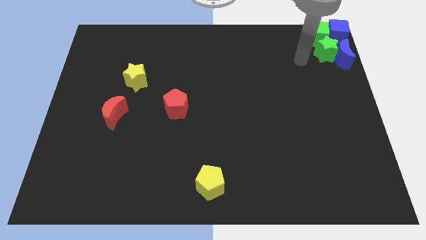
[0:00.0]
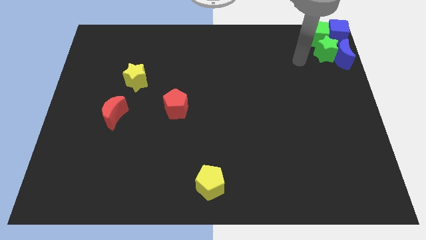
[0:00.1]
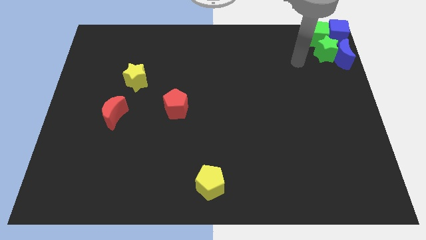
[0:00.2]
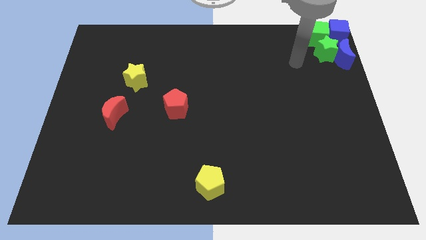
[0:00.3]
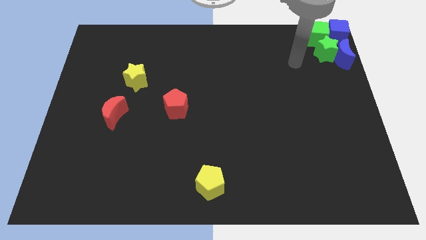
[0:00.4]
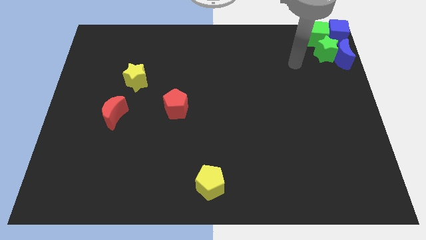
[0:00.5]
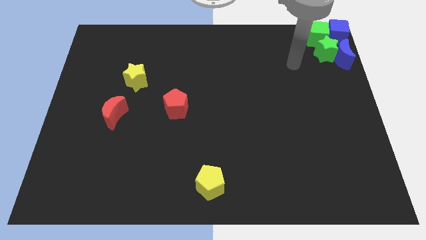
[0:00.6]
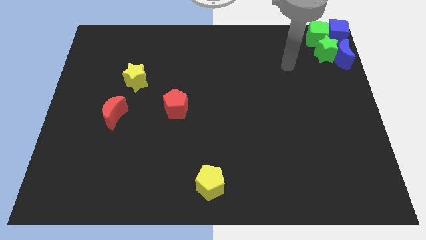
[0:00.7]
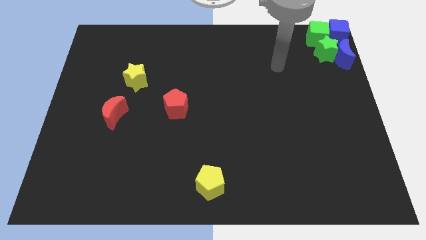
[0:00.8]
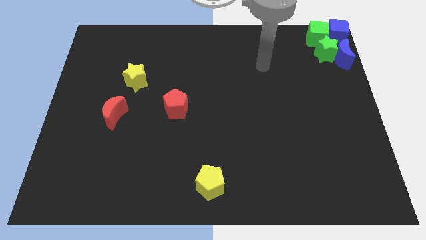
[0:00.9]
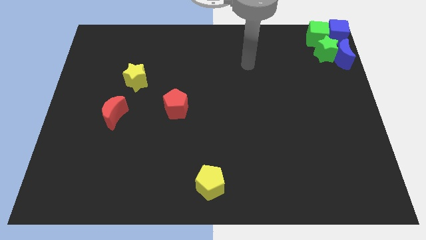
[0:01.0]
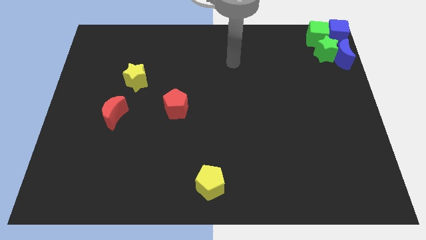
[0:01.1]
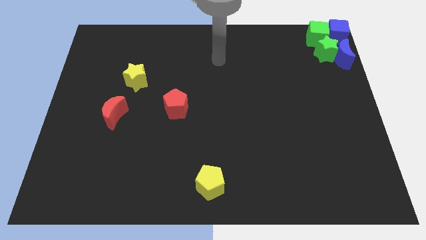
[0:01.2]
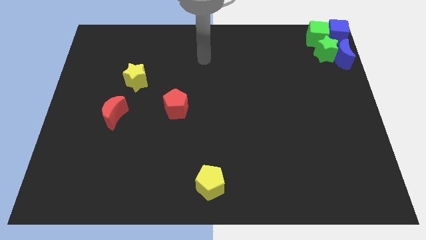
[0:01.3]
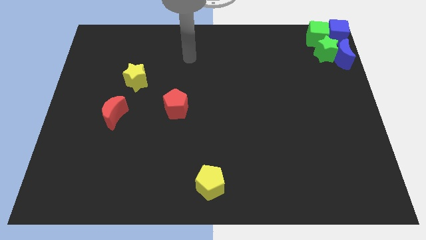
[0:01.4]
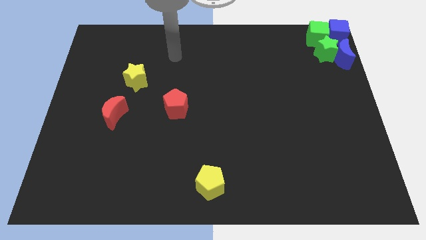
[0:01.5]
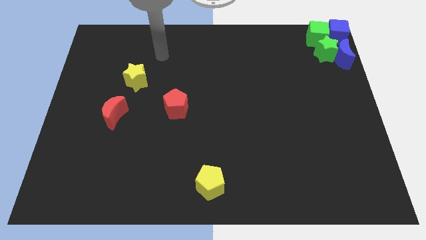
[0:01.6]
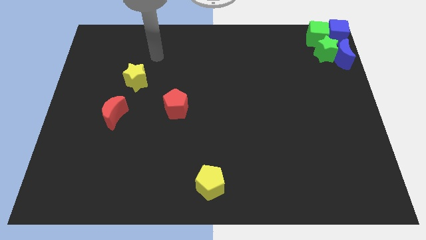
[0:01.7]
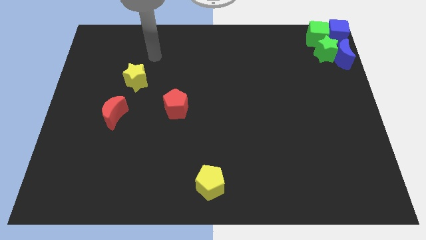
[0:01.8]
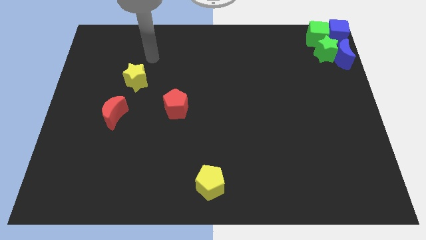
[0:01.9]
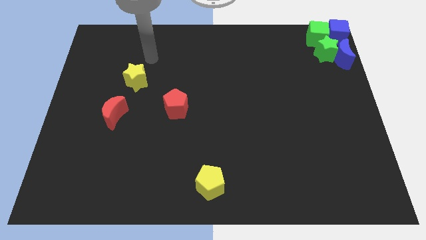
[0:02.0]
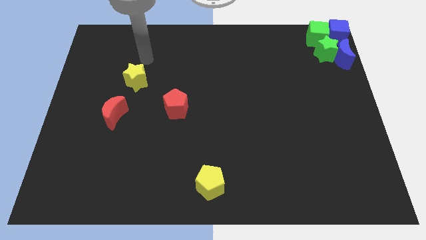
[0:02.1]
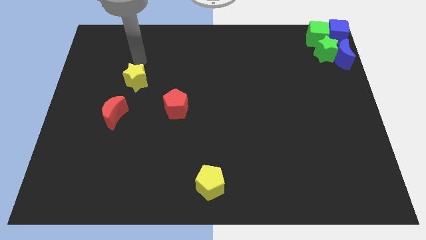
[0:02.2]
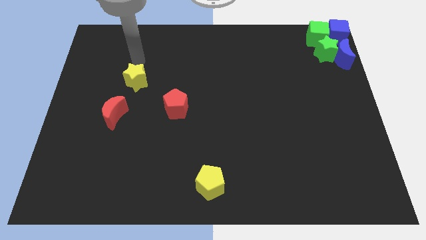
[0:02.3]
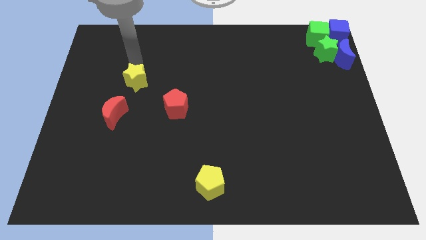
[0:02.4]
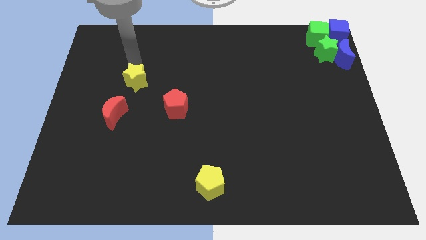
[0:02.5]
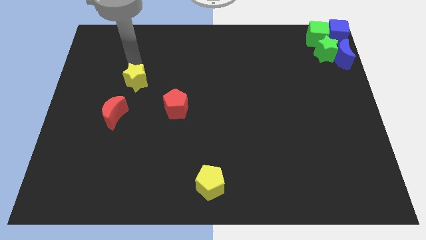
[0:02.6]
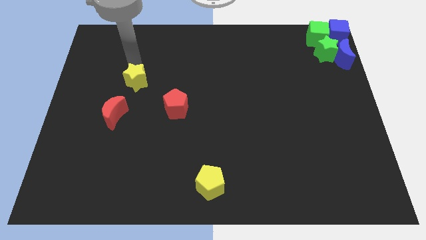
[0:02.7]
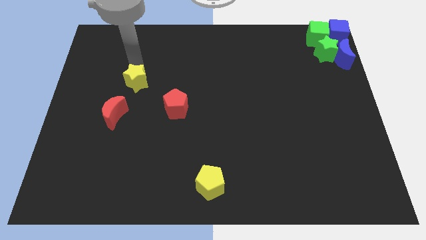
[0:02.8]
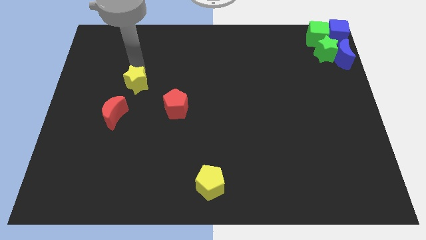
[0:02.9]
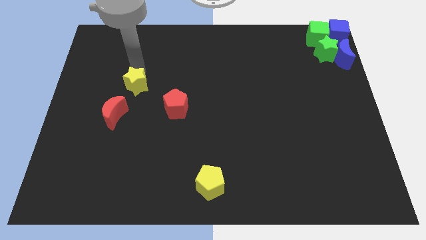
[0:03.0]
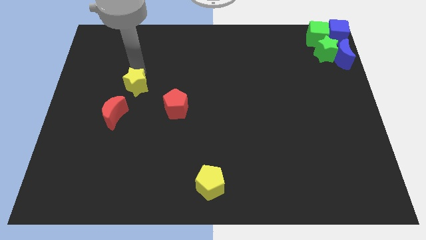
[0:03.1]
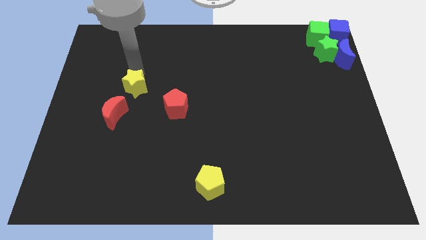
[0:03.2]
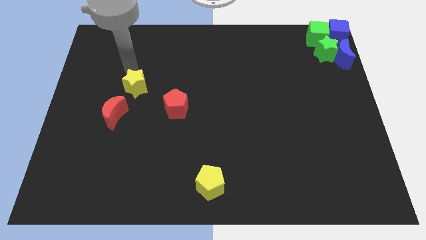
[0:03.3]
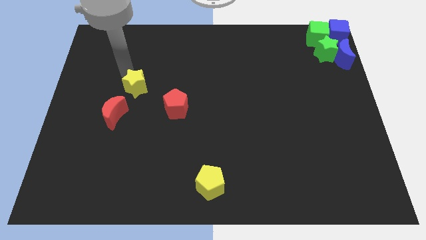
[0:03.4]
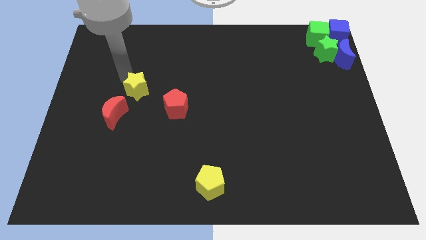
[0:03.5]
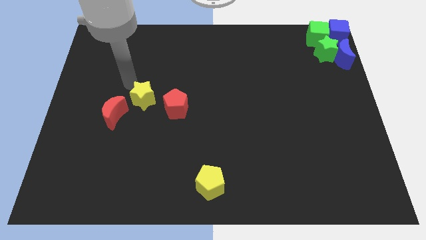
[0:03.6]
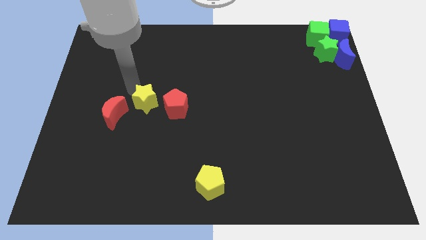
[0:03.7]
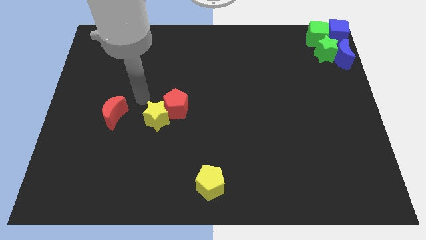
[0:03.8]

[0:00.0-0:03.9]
move the yellow star to the left of the red pentagon

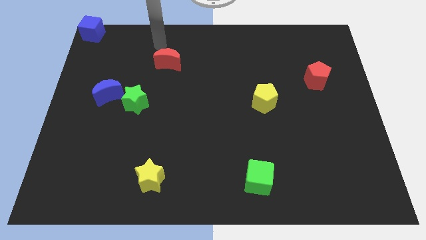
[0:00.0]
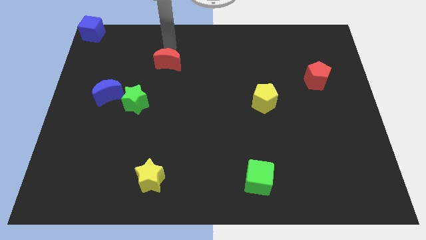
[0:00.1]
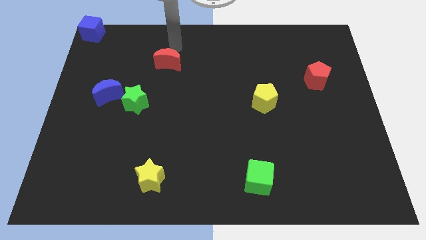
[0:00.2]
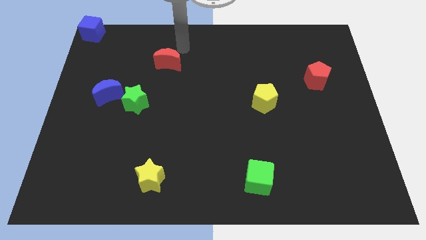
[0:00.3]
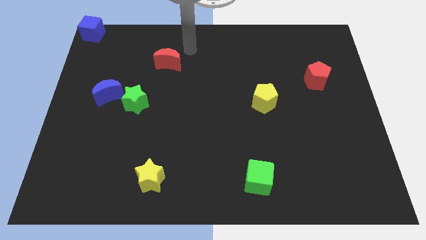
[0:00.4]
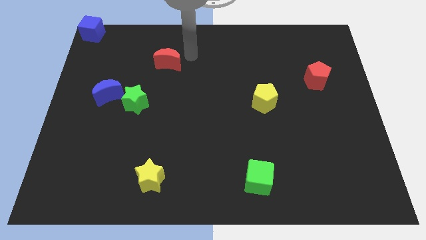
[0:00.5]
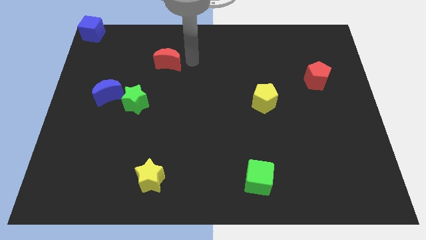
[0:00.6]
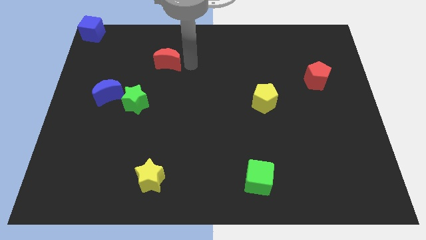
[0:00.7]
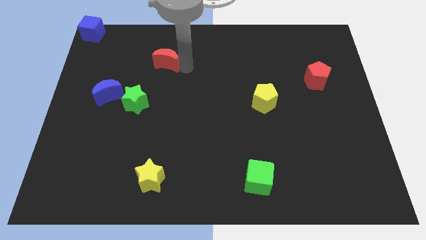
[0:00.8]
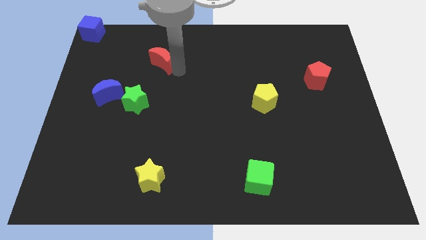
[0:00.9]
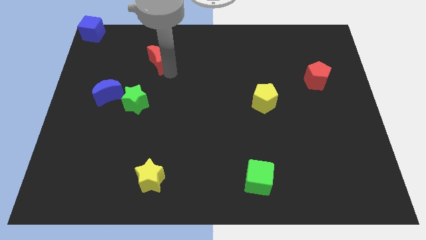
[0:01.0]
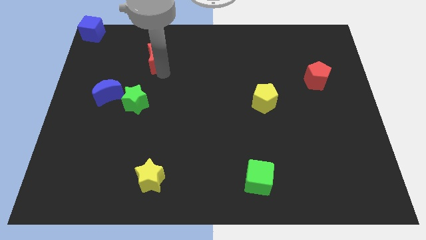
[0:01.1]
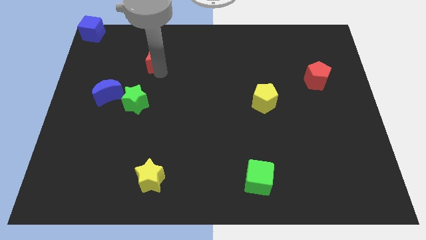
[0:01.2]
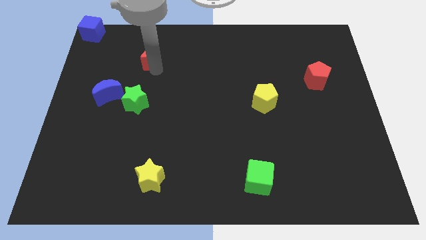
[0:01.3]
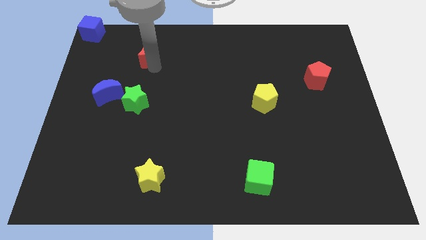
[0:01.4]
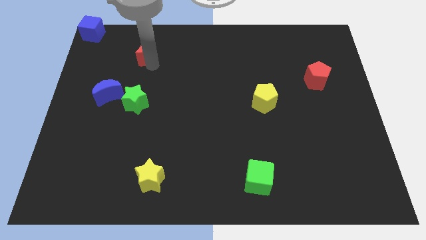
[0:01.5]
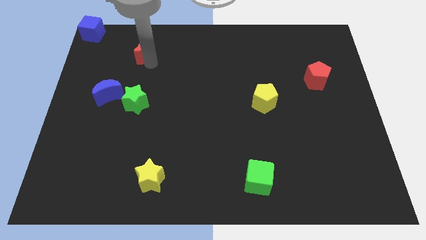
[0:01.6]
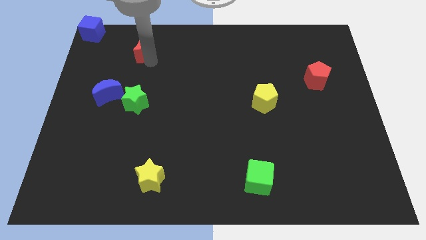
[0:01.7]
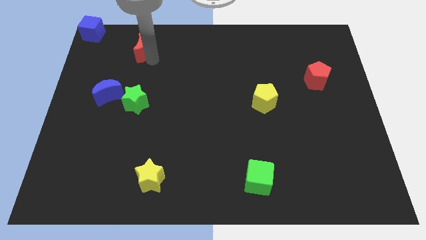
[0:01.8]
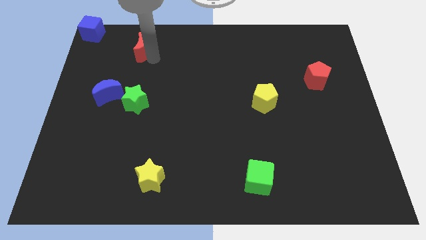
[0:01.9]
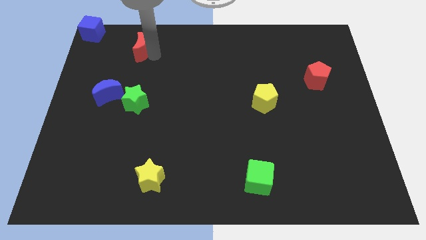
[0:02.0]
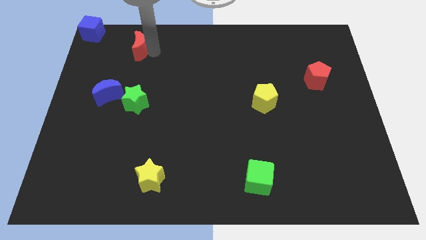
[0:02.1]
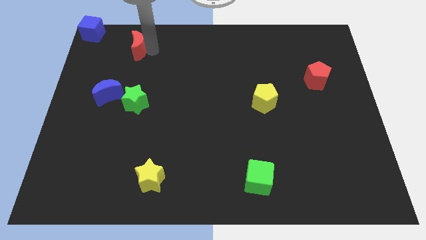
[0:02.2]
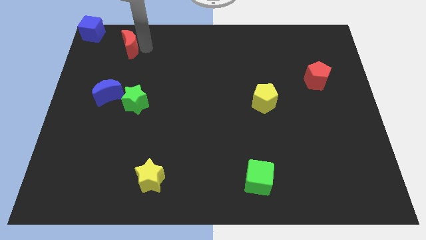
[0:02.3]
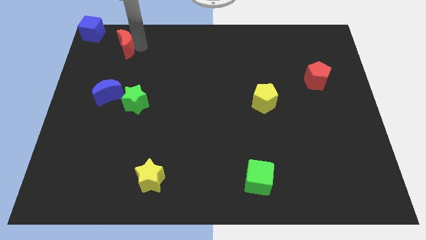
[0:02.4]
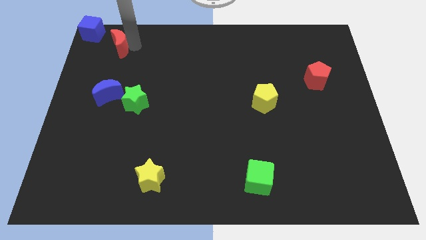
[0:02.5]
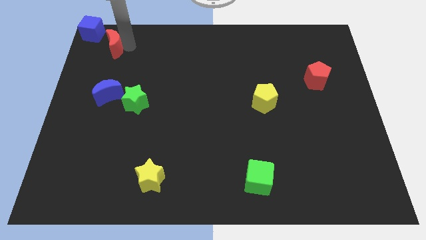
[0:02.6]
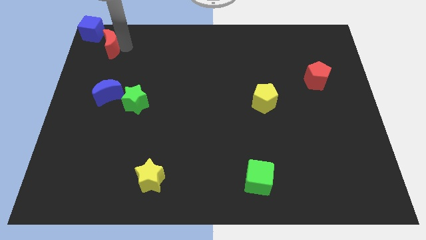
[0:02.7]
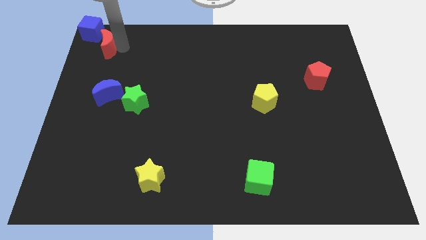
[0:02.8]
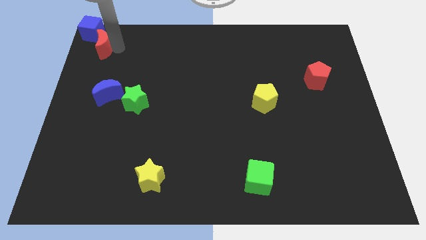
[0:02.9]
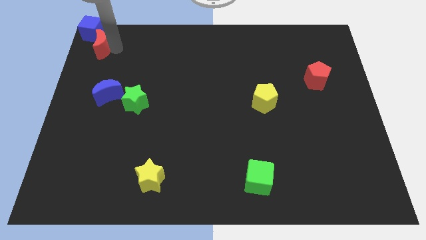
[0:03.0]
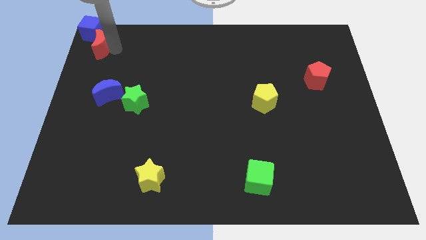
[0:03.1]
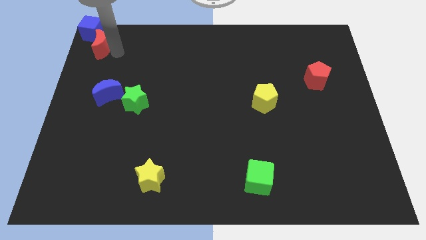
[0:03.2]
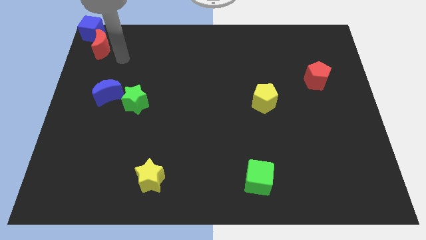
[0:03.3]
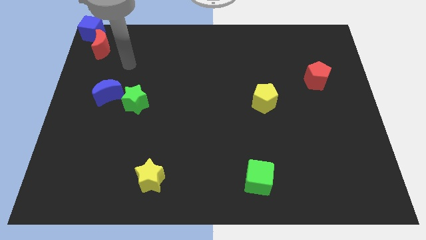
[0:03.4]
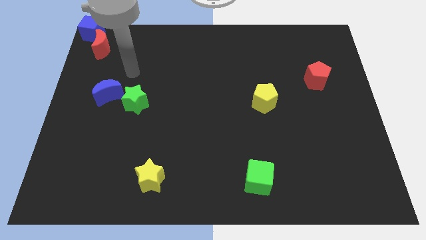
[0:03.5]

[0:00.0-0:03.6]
push the red moon close to the blue cube

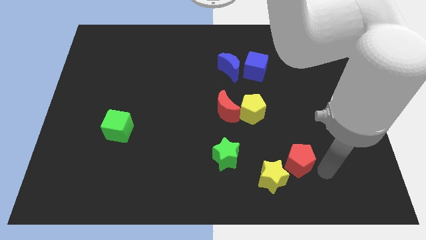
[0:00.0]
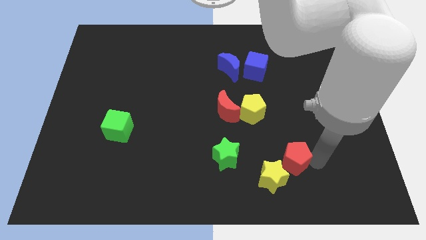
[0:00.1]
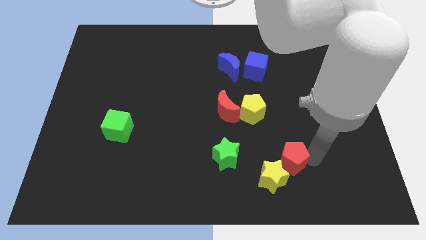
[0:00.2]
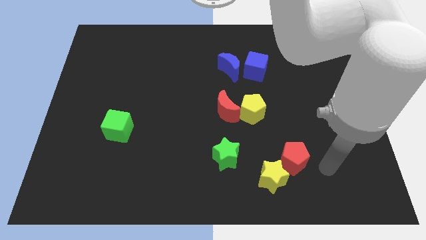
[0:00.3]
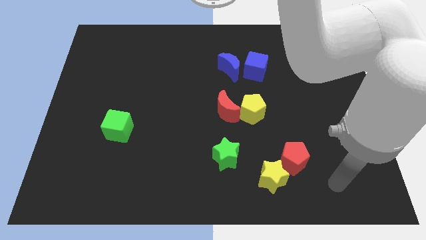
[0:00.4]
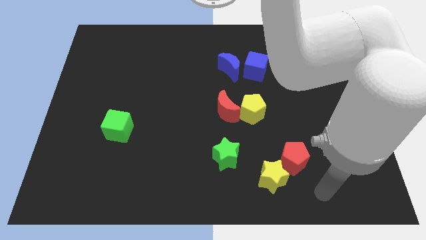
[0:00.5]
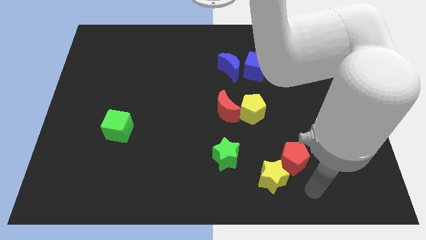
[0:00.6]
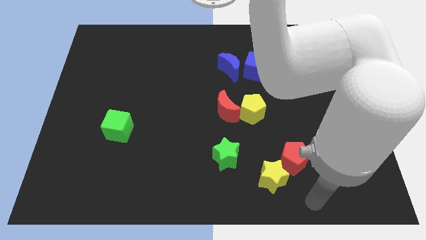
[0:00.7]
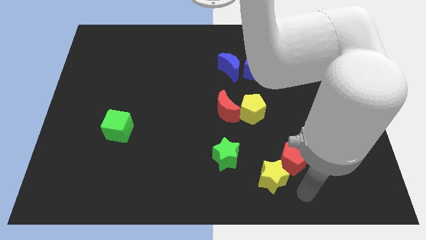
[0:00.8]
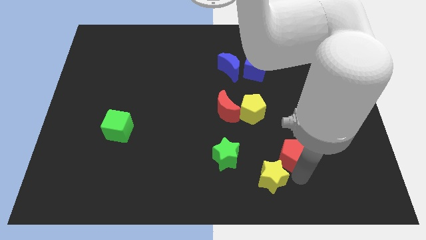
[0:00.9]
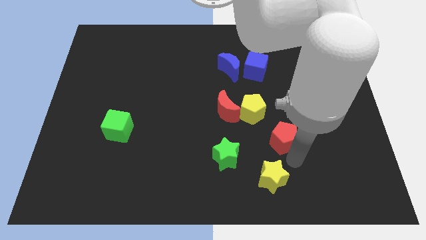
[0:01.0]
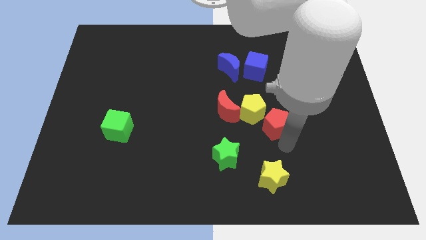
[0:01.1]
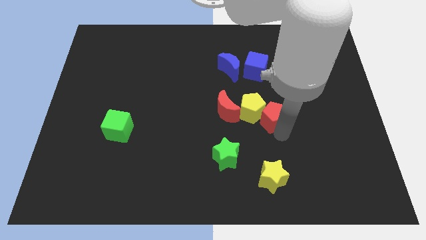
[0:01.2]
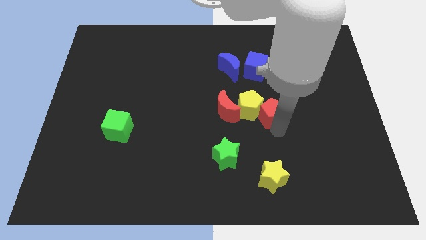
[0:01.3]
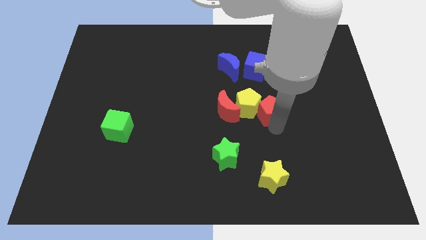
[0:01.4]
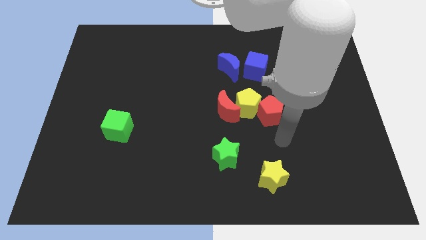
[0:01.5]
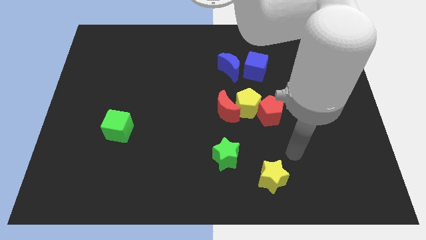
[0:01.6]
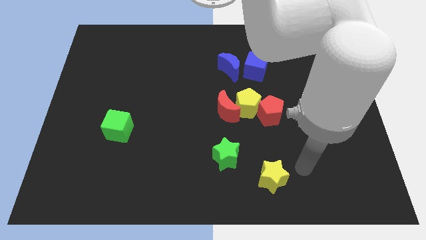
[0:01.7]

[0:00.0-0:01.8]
push the red pentagon close to the yellow pentagon
